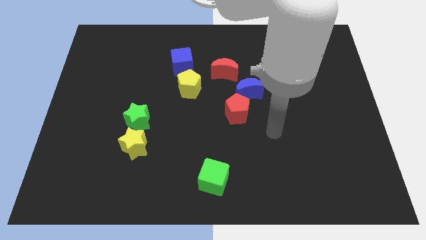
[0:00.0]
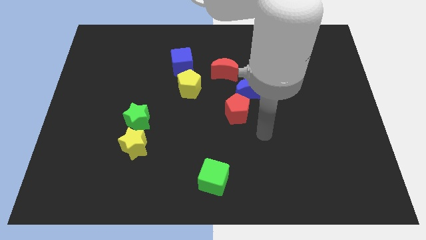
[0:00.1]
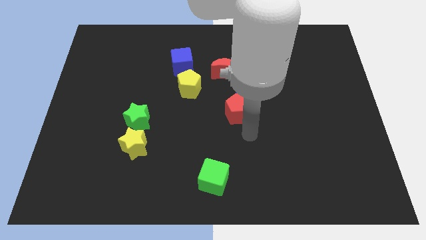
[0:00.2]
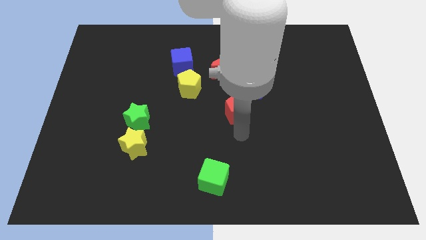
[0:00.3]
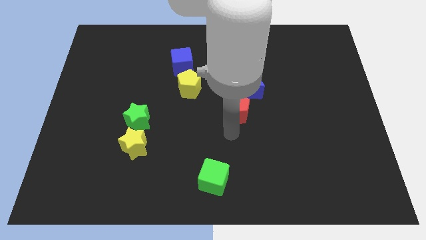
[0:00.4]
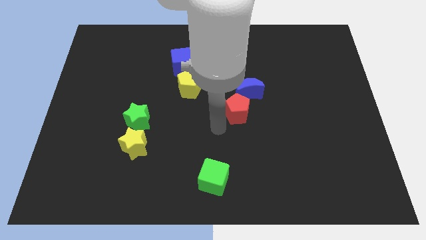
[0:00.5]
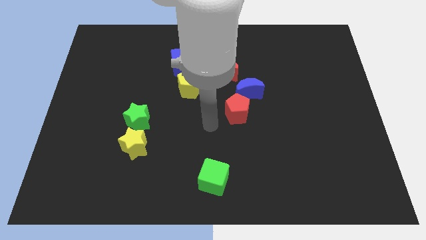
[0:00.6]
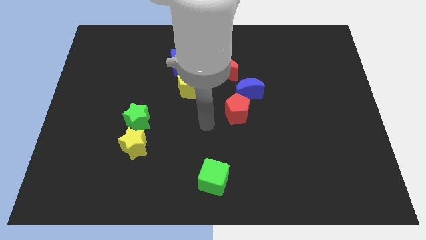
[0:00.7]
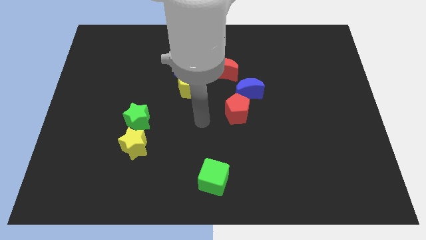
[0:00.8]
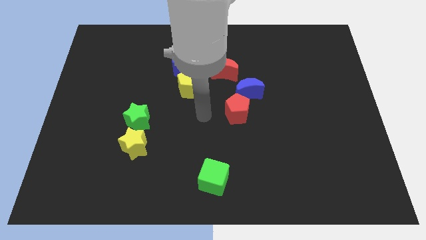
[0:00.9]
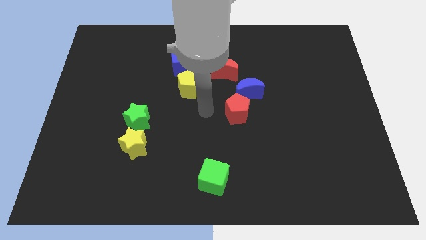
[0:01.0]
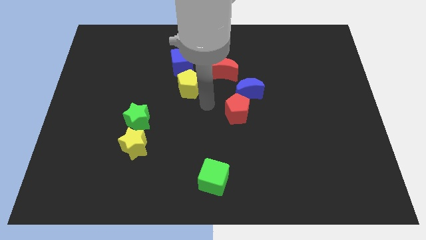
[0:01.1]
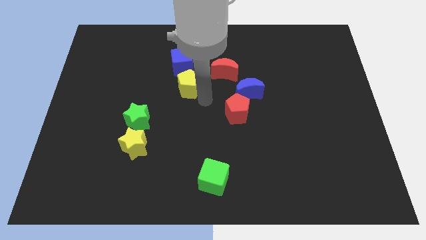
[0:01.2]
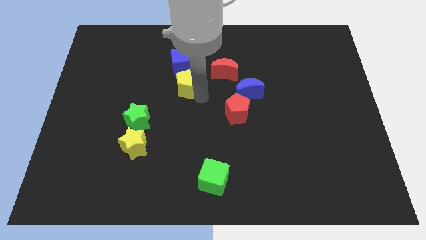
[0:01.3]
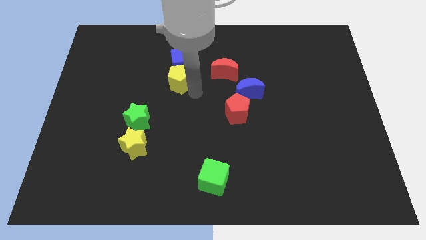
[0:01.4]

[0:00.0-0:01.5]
place yellow pentagon below blue cube

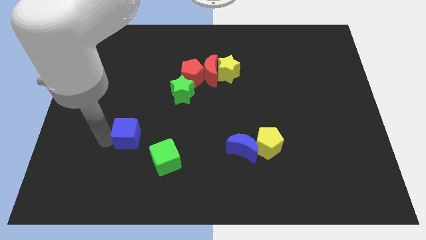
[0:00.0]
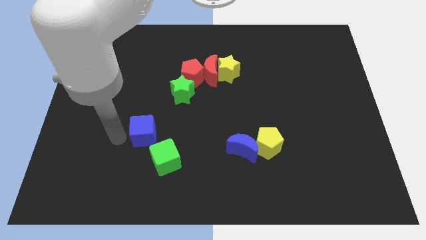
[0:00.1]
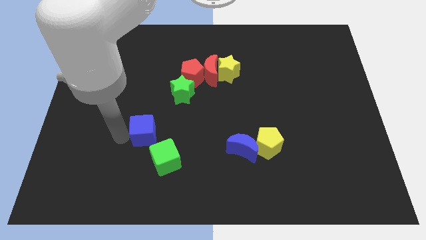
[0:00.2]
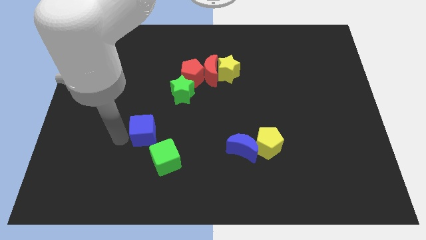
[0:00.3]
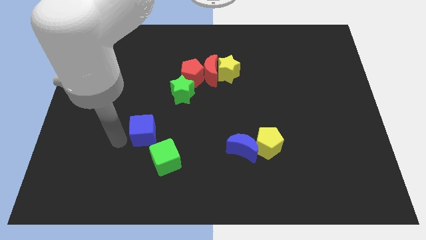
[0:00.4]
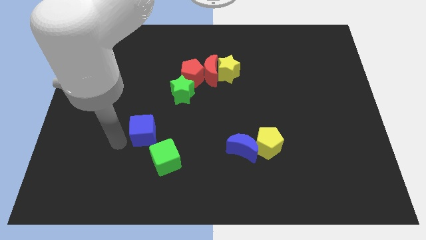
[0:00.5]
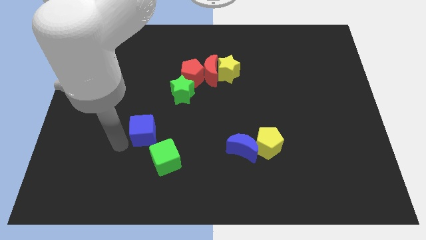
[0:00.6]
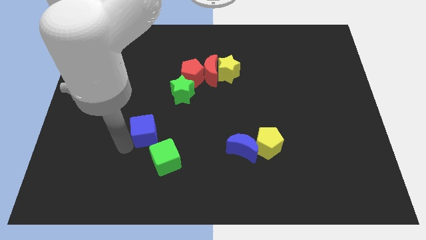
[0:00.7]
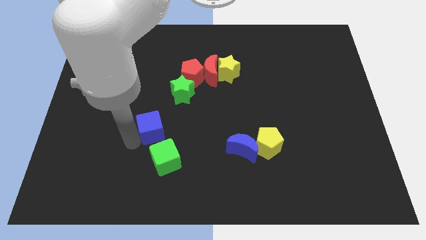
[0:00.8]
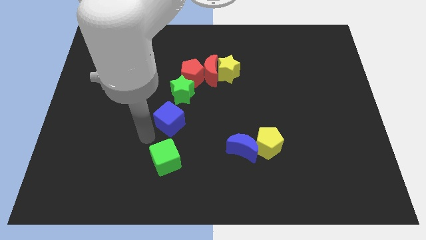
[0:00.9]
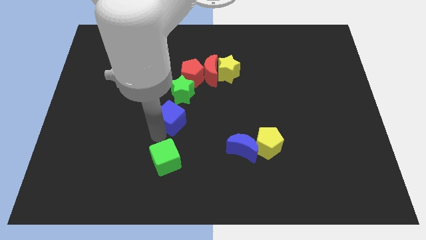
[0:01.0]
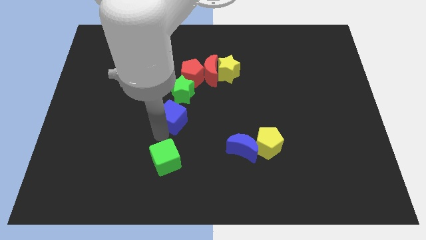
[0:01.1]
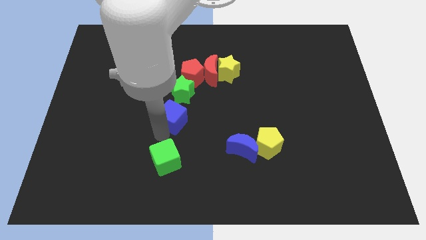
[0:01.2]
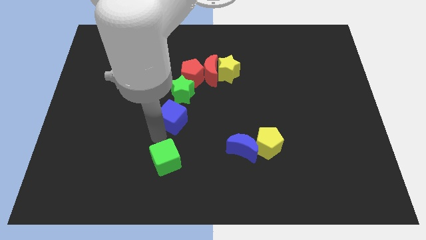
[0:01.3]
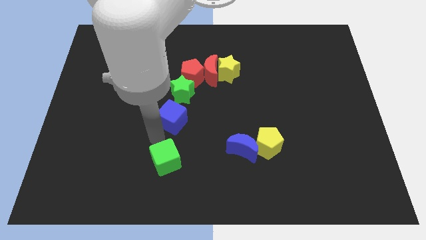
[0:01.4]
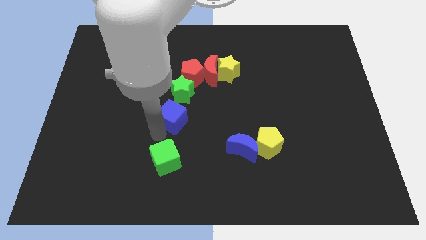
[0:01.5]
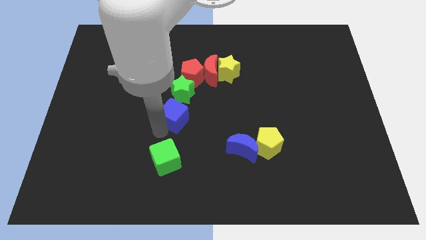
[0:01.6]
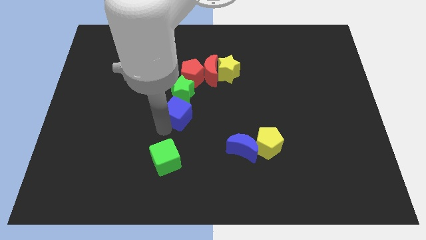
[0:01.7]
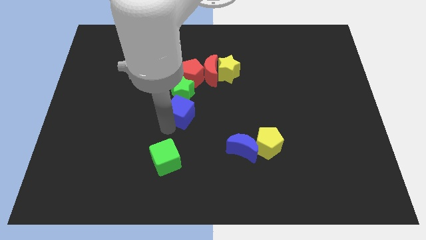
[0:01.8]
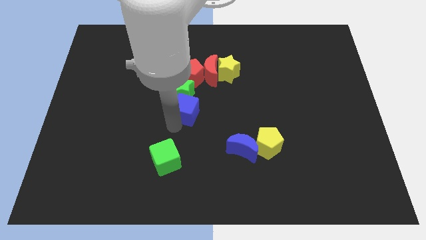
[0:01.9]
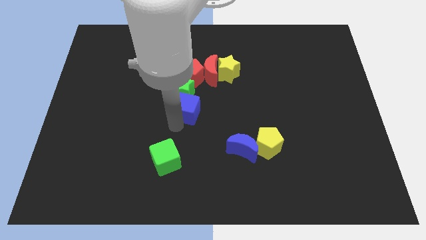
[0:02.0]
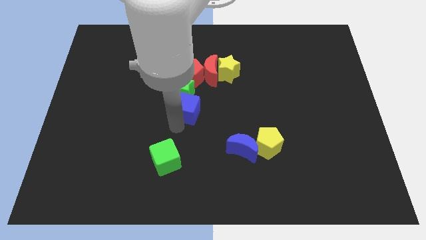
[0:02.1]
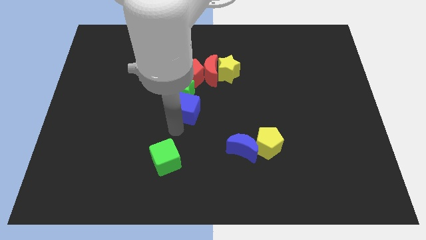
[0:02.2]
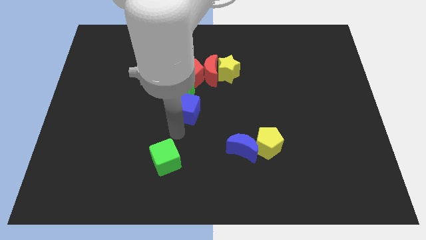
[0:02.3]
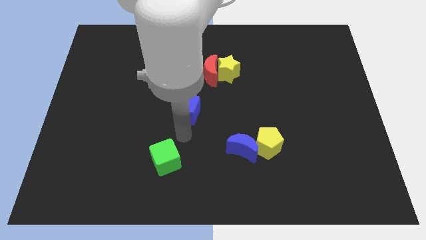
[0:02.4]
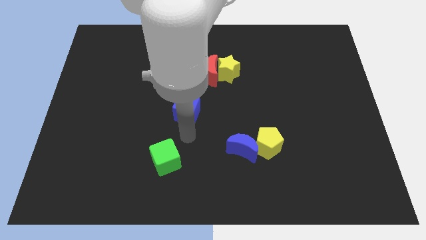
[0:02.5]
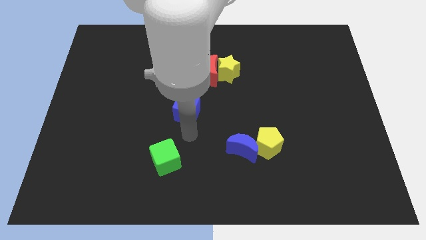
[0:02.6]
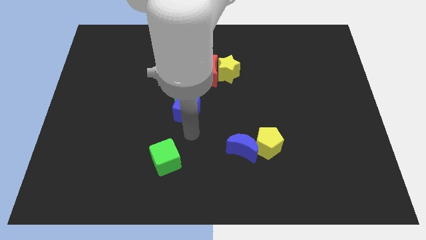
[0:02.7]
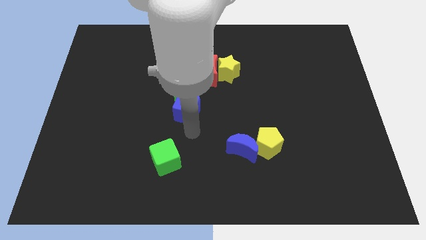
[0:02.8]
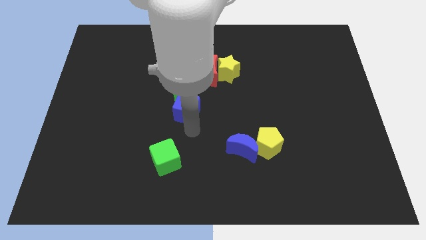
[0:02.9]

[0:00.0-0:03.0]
push the blue cube to the bottom side of the green star

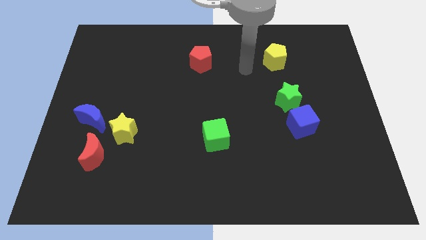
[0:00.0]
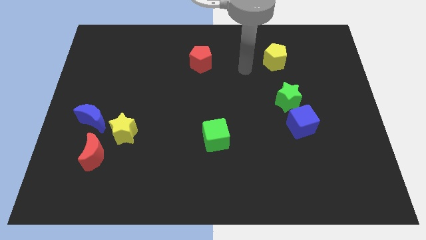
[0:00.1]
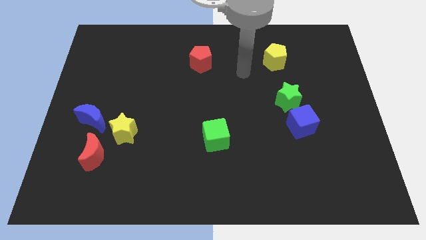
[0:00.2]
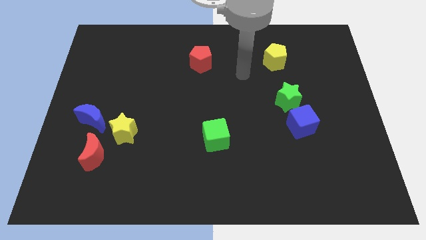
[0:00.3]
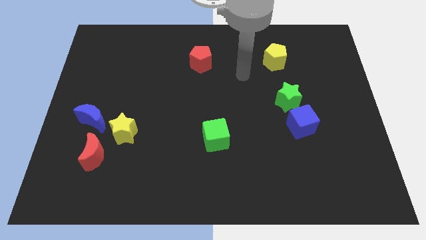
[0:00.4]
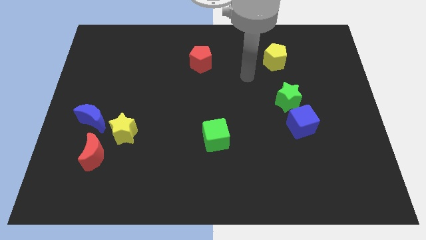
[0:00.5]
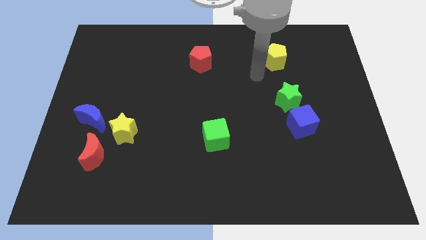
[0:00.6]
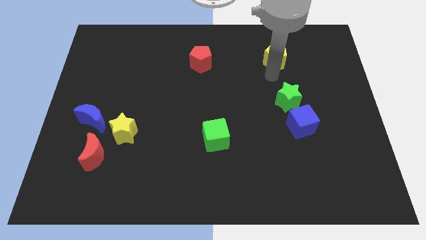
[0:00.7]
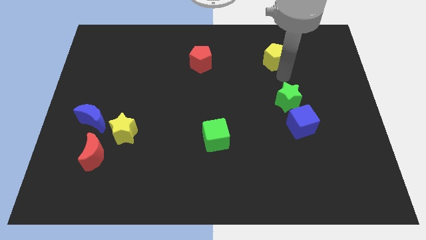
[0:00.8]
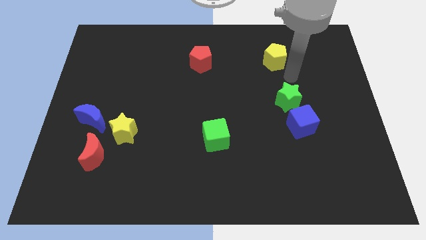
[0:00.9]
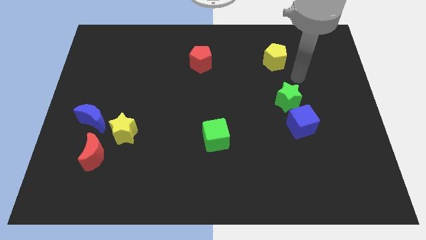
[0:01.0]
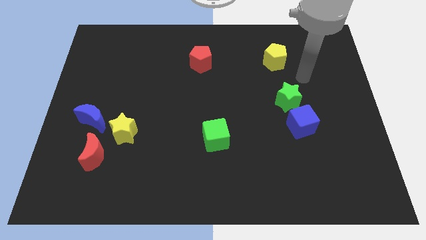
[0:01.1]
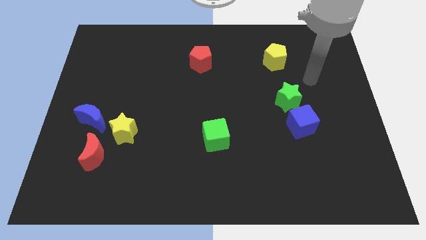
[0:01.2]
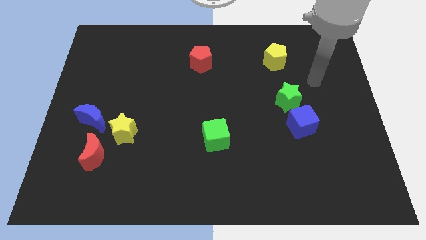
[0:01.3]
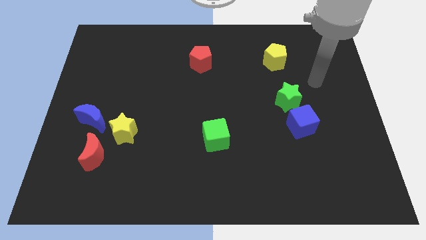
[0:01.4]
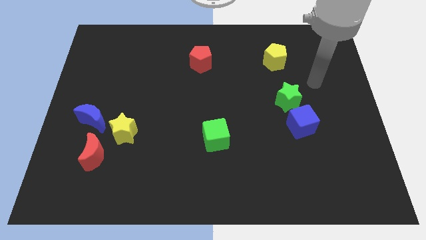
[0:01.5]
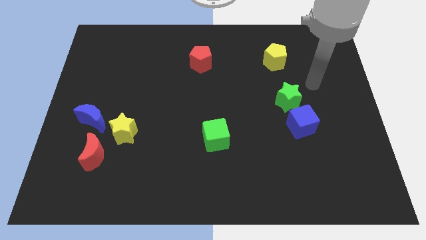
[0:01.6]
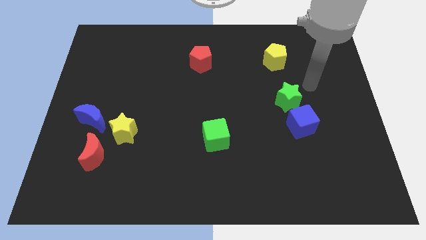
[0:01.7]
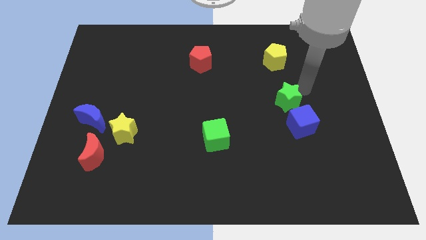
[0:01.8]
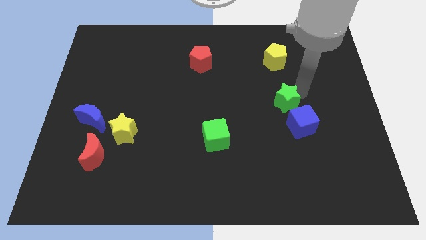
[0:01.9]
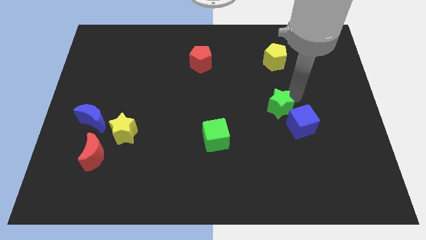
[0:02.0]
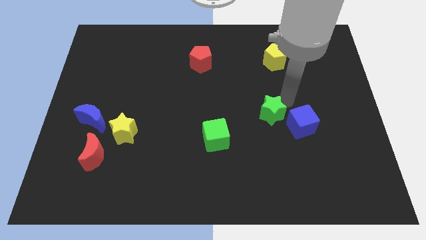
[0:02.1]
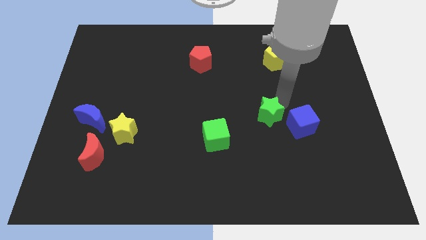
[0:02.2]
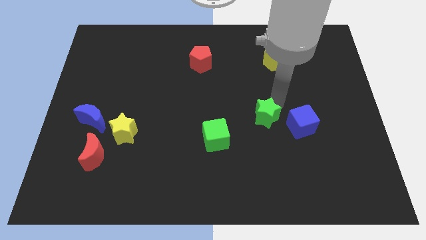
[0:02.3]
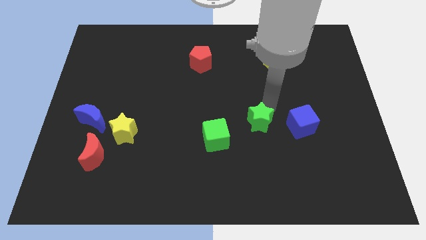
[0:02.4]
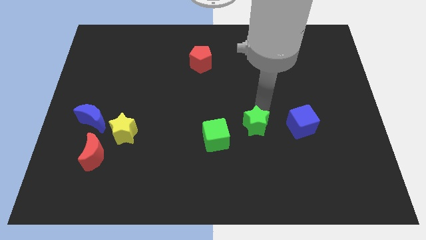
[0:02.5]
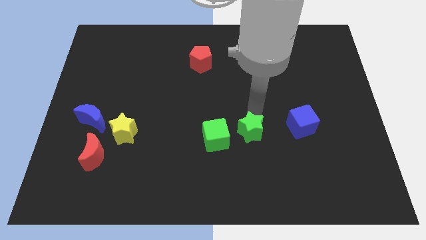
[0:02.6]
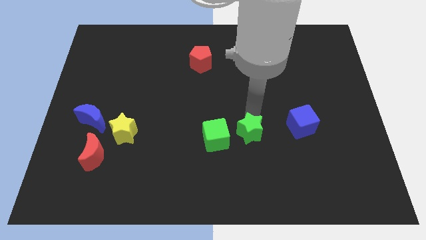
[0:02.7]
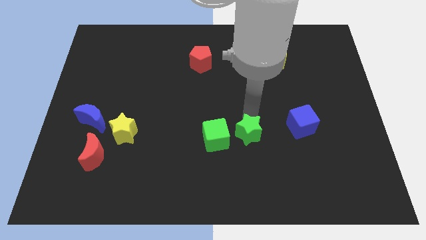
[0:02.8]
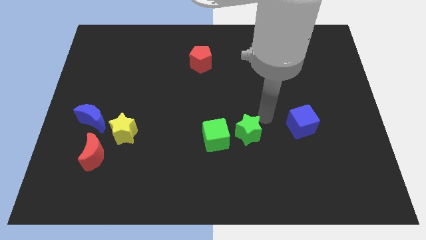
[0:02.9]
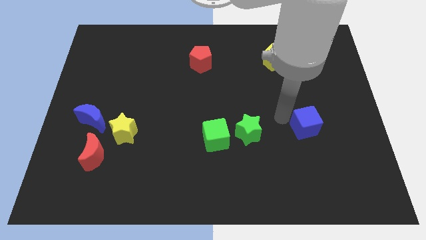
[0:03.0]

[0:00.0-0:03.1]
push the green star to the right of the green cube

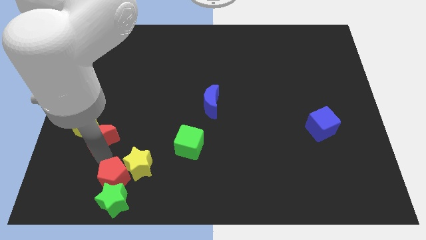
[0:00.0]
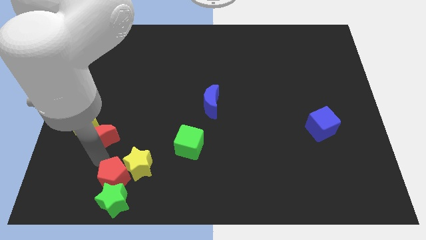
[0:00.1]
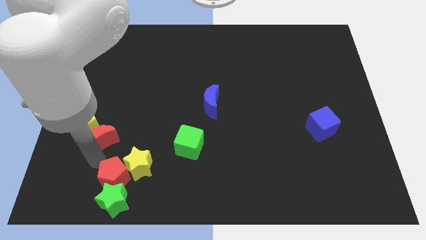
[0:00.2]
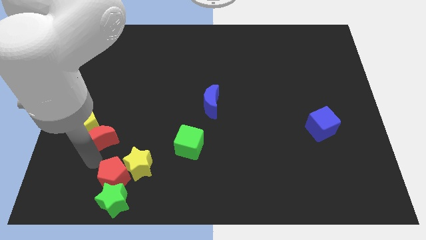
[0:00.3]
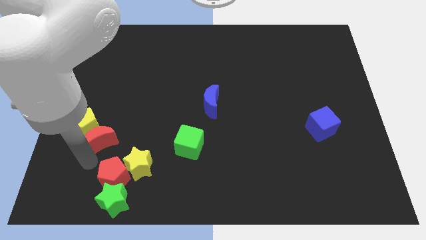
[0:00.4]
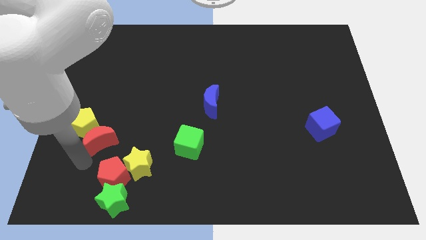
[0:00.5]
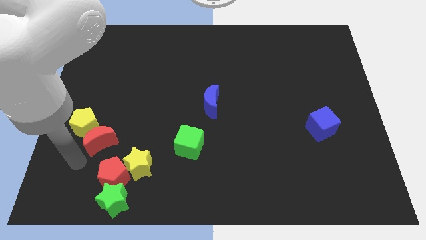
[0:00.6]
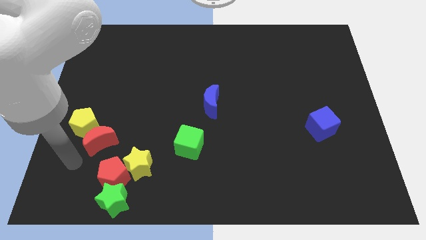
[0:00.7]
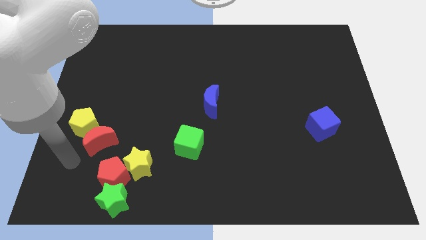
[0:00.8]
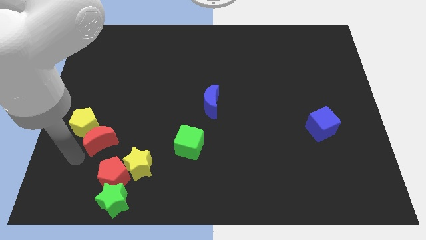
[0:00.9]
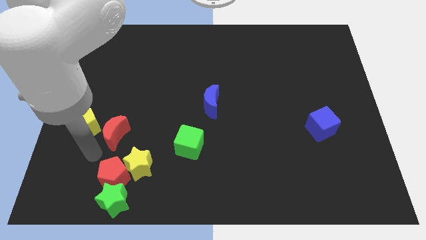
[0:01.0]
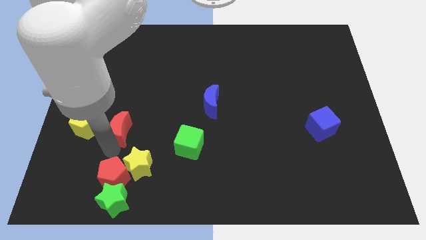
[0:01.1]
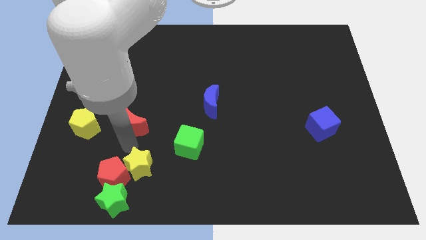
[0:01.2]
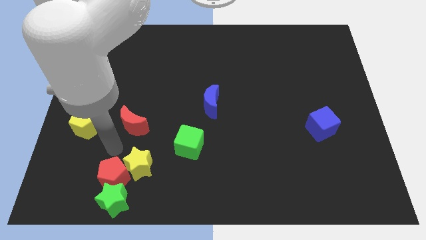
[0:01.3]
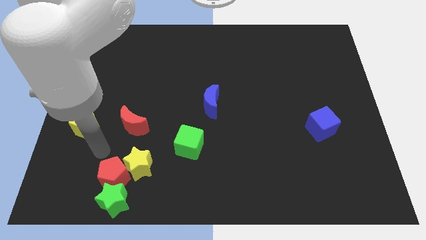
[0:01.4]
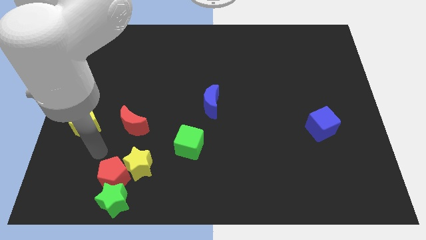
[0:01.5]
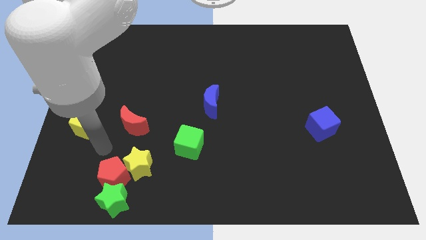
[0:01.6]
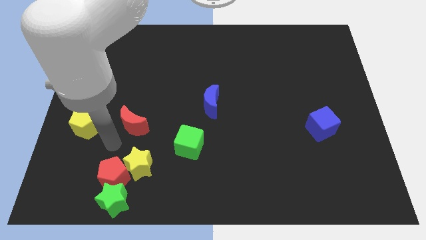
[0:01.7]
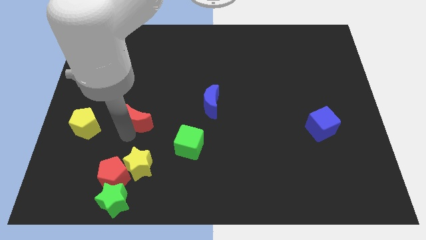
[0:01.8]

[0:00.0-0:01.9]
move red crescent to the top side of the yellow star
